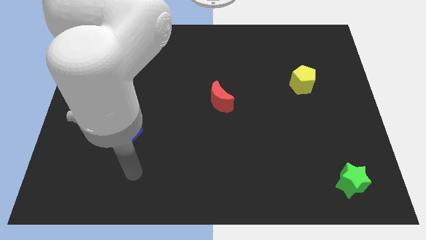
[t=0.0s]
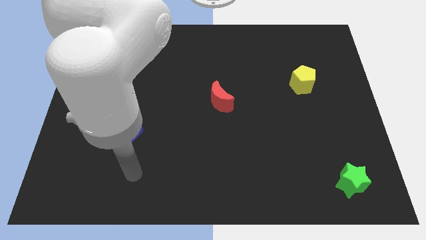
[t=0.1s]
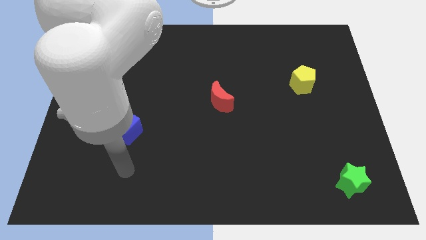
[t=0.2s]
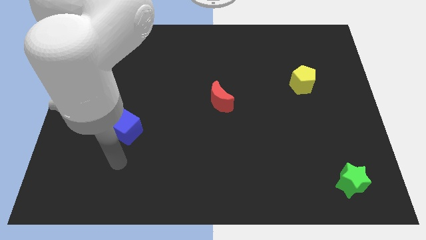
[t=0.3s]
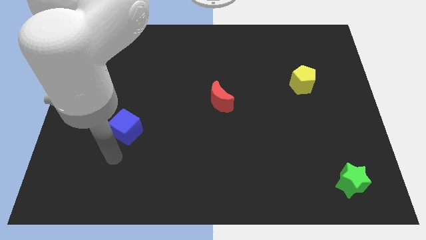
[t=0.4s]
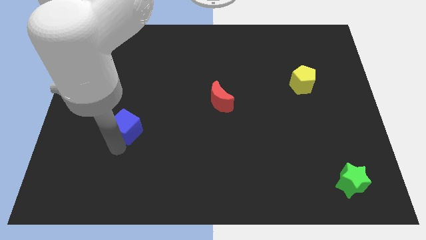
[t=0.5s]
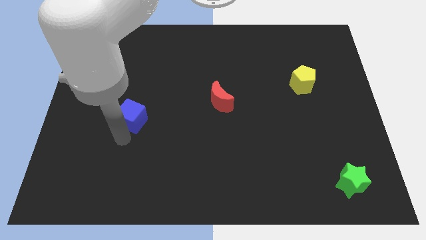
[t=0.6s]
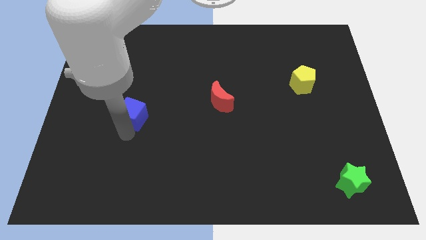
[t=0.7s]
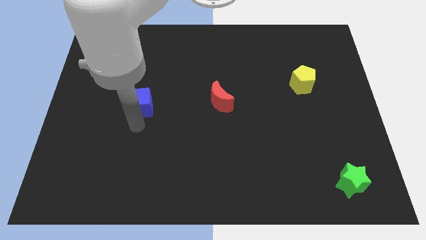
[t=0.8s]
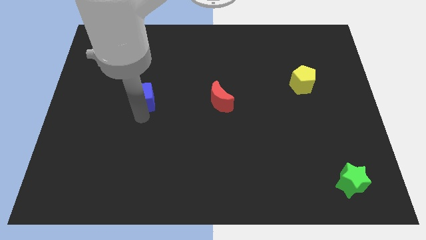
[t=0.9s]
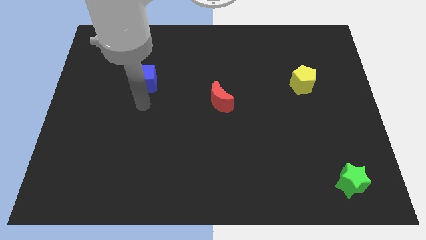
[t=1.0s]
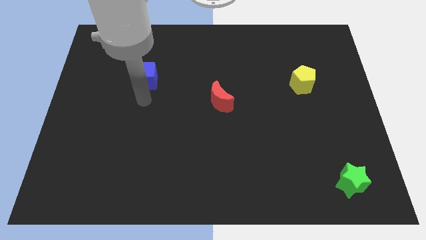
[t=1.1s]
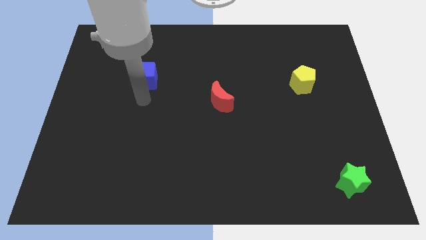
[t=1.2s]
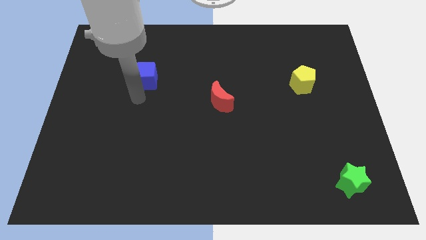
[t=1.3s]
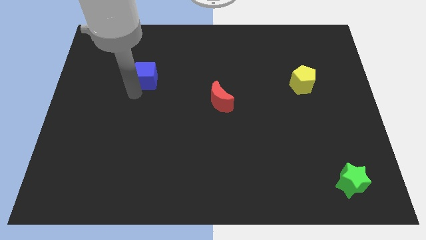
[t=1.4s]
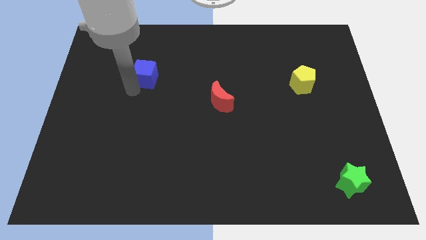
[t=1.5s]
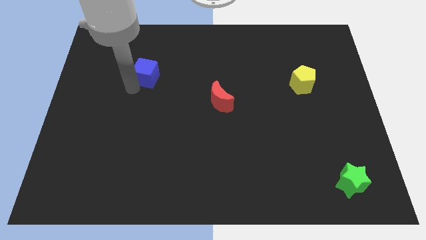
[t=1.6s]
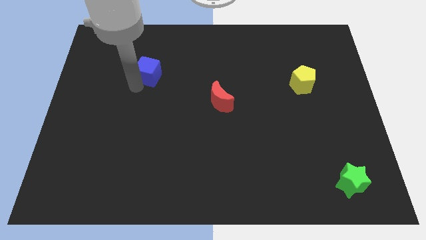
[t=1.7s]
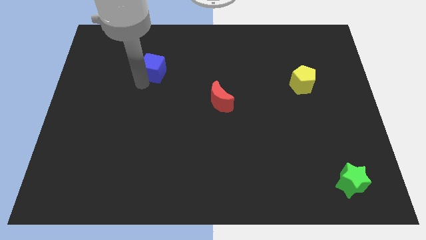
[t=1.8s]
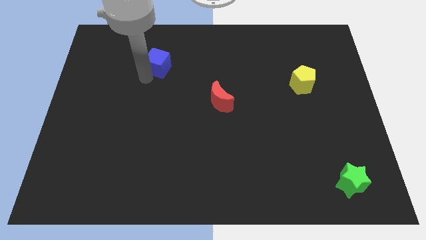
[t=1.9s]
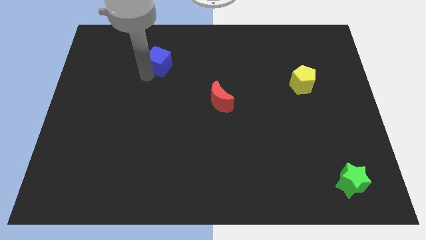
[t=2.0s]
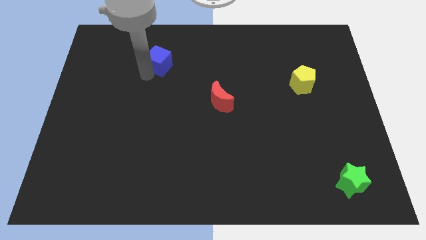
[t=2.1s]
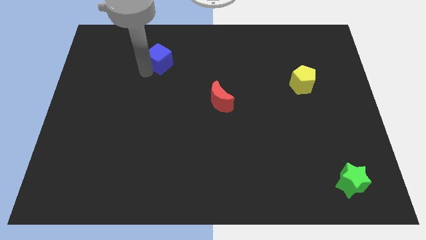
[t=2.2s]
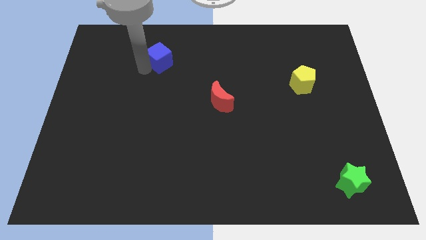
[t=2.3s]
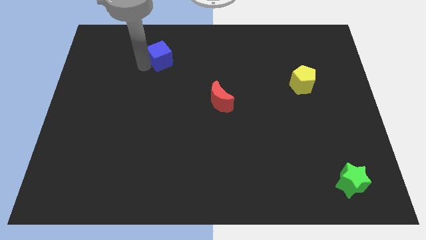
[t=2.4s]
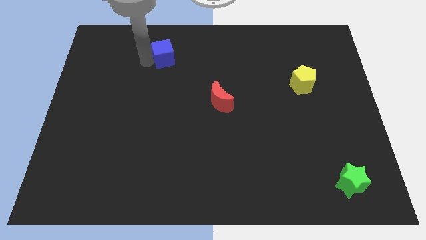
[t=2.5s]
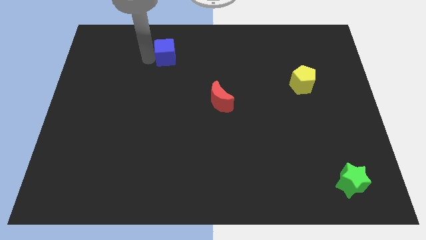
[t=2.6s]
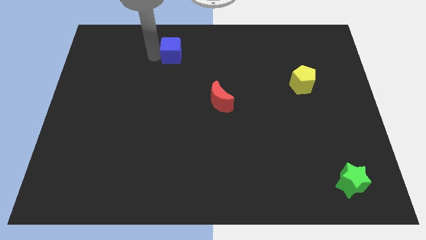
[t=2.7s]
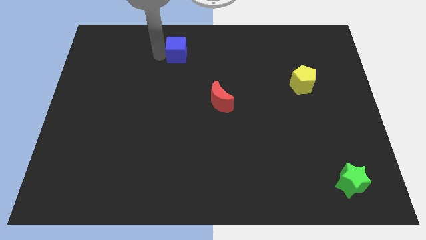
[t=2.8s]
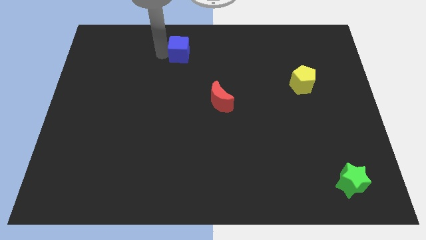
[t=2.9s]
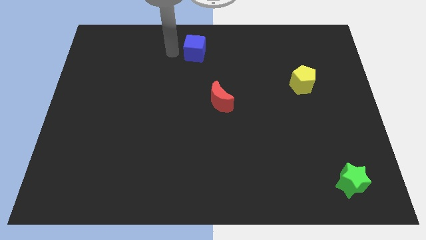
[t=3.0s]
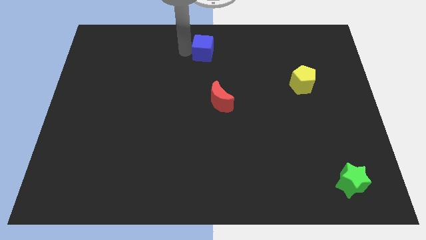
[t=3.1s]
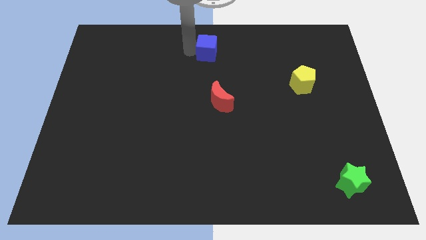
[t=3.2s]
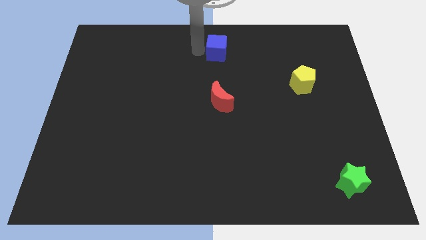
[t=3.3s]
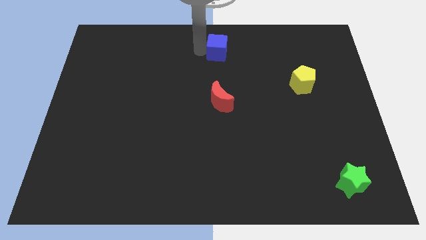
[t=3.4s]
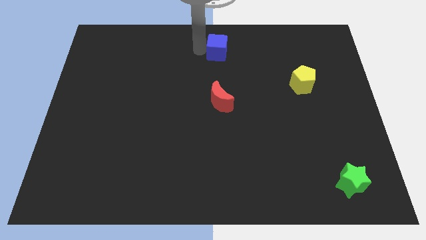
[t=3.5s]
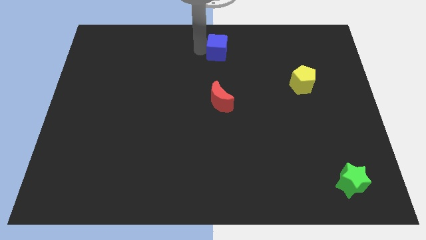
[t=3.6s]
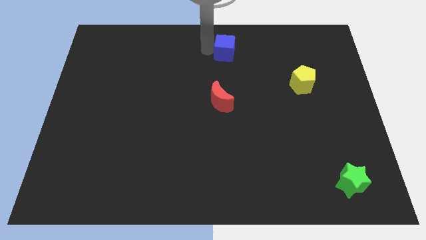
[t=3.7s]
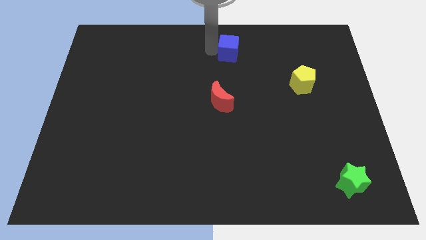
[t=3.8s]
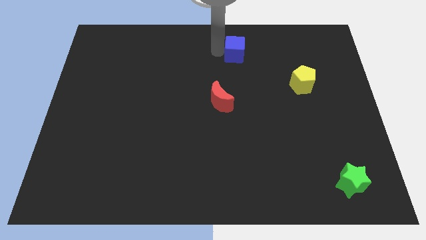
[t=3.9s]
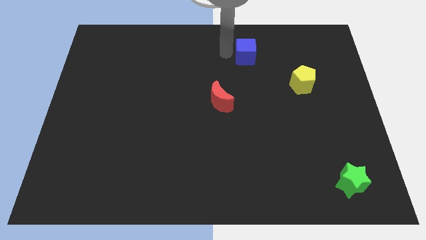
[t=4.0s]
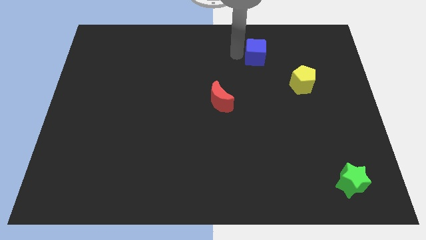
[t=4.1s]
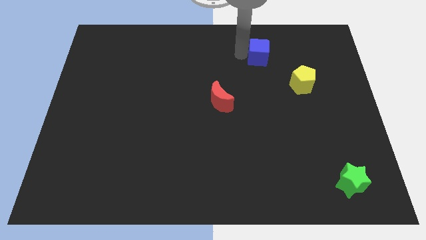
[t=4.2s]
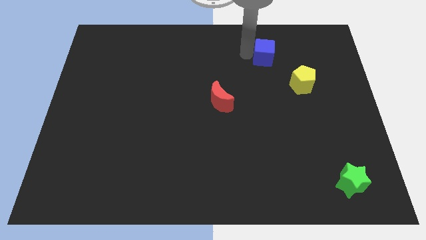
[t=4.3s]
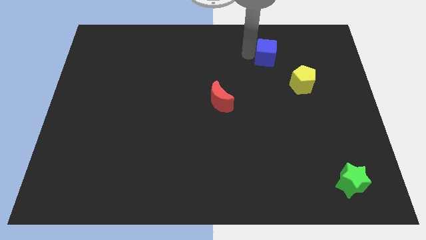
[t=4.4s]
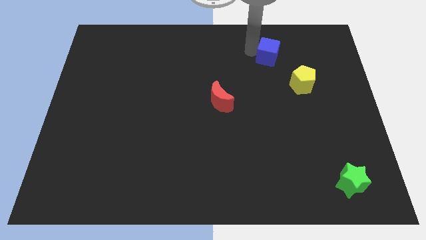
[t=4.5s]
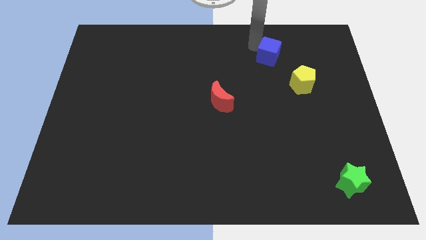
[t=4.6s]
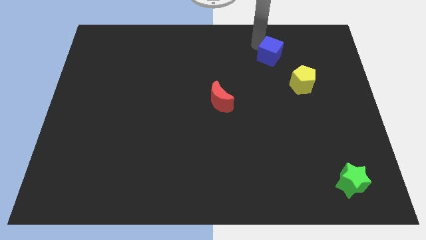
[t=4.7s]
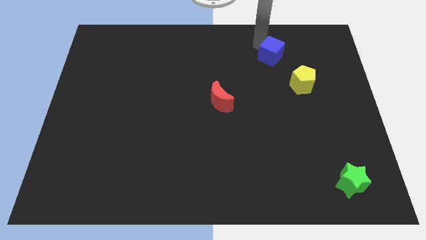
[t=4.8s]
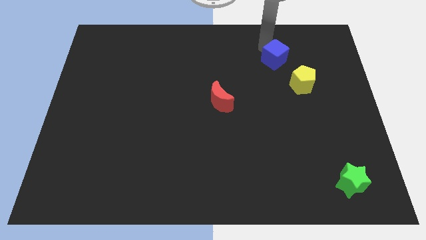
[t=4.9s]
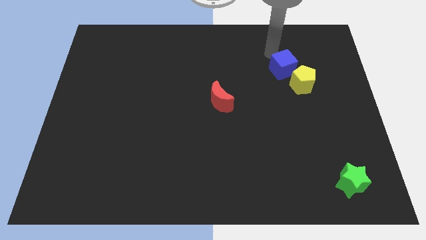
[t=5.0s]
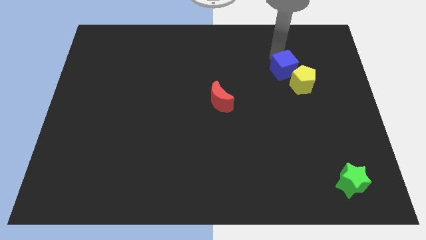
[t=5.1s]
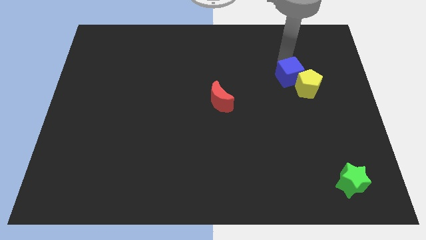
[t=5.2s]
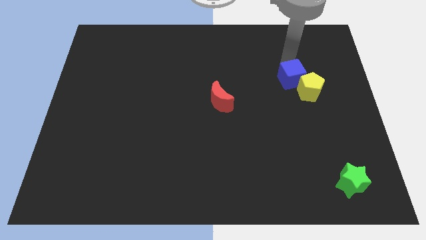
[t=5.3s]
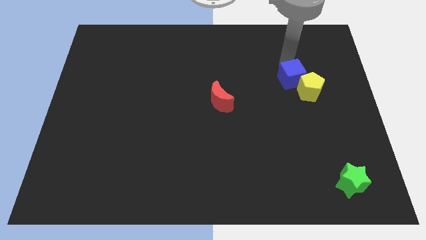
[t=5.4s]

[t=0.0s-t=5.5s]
put the cube next to the yellow block

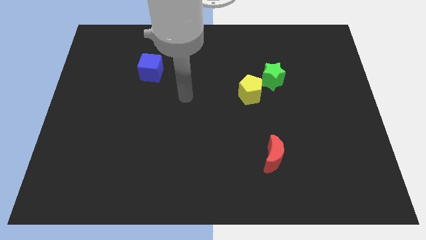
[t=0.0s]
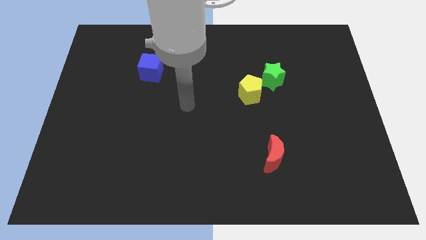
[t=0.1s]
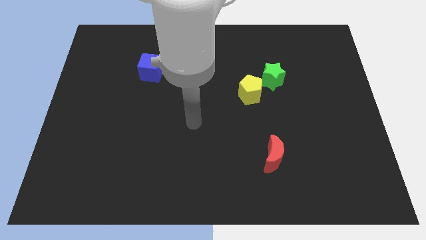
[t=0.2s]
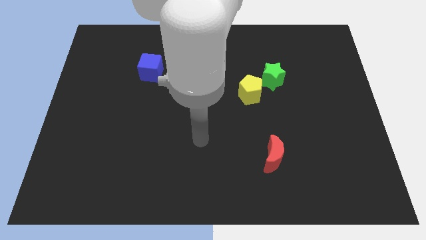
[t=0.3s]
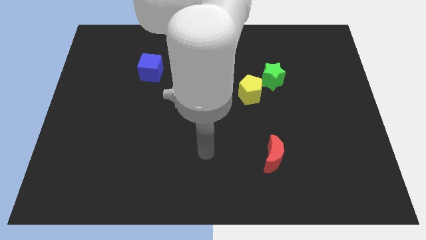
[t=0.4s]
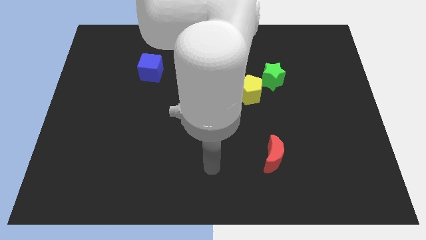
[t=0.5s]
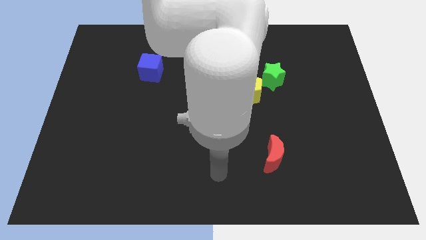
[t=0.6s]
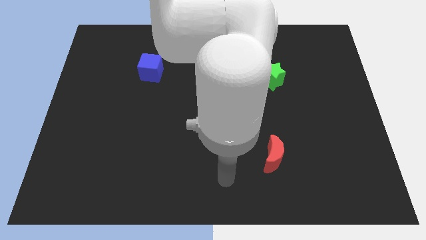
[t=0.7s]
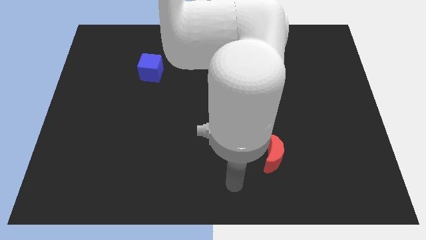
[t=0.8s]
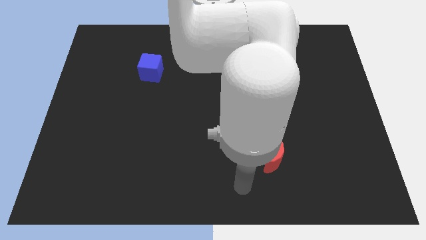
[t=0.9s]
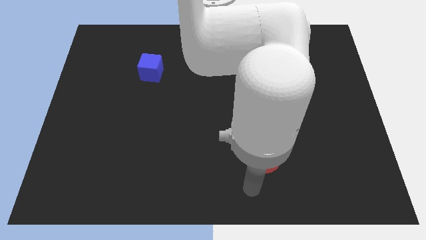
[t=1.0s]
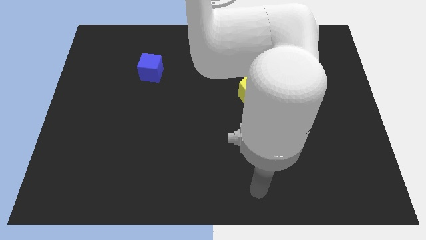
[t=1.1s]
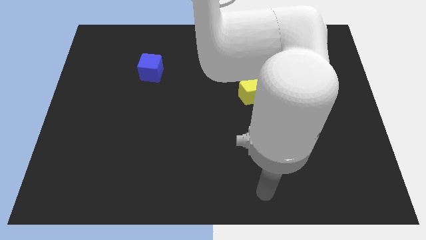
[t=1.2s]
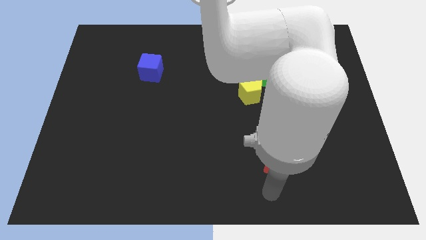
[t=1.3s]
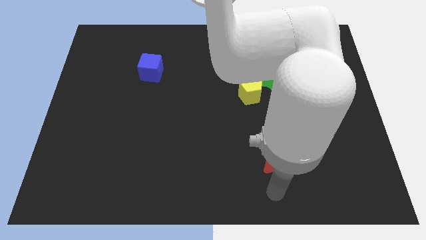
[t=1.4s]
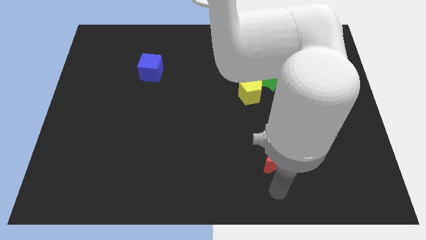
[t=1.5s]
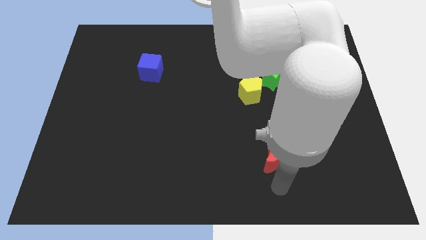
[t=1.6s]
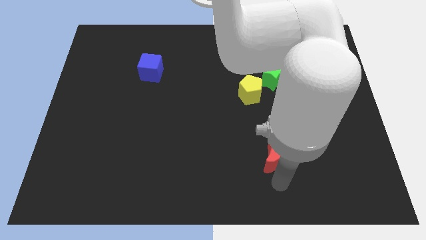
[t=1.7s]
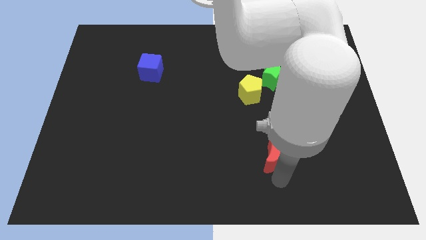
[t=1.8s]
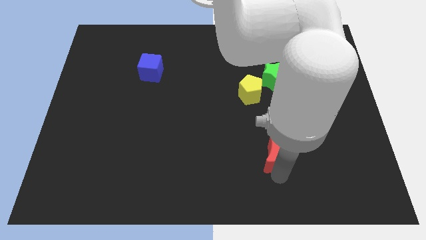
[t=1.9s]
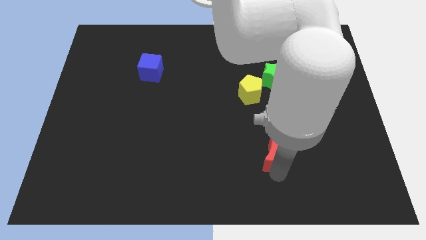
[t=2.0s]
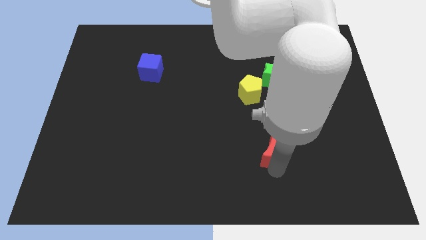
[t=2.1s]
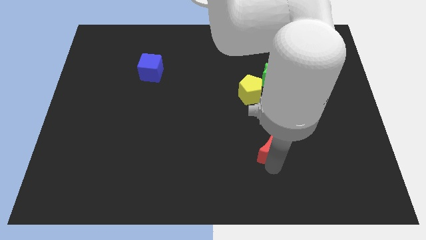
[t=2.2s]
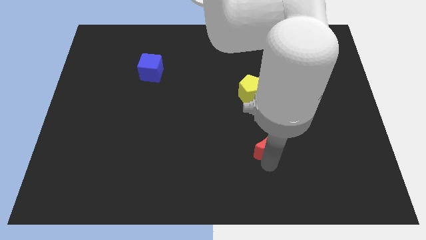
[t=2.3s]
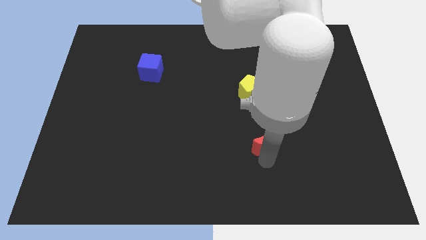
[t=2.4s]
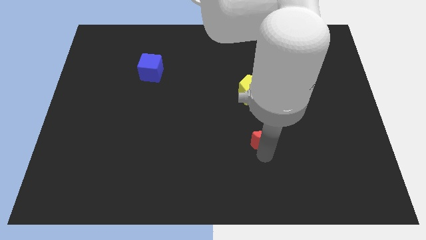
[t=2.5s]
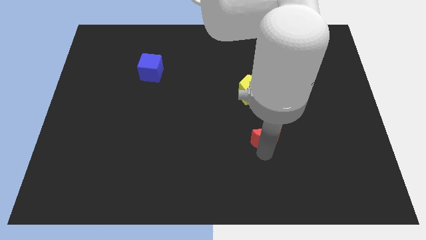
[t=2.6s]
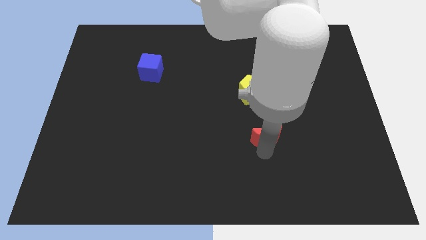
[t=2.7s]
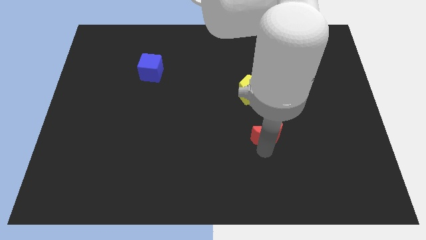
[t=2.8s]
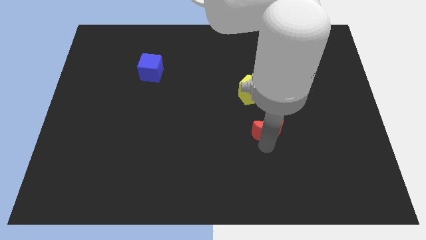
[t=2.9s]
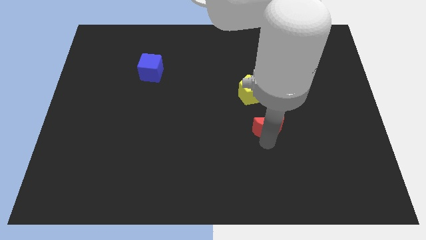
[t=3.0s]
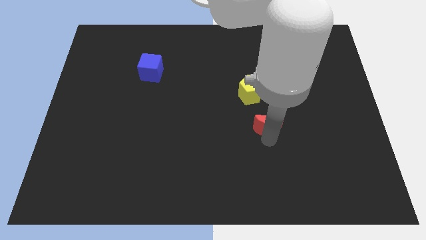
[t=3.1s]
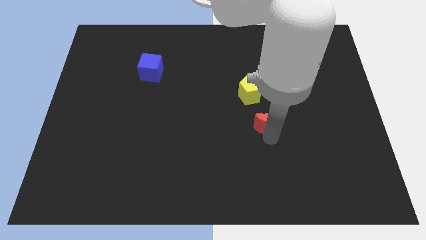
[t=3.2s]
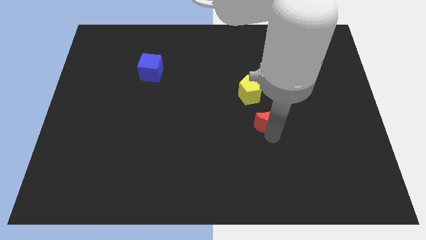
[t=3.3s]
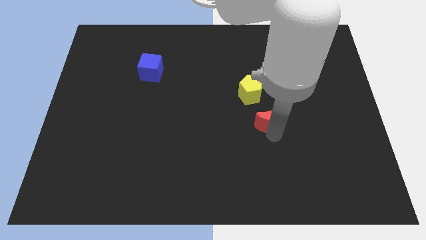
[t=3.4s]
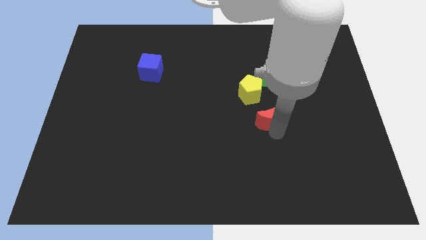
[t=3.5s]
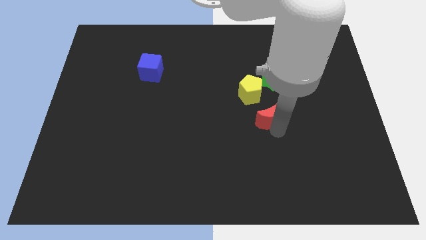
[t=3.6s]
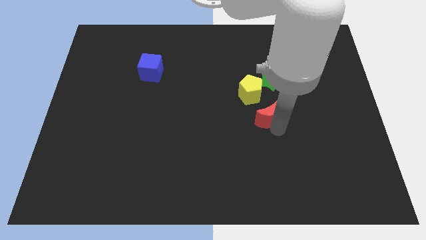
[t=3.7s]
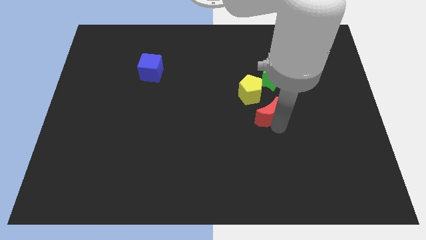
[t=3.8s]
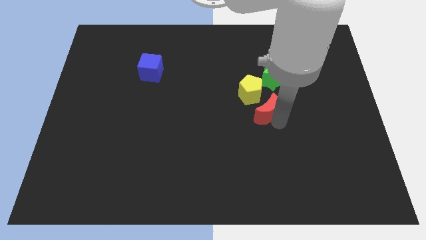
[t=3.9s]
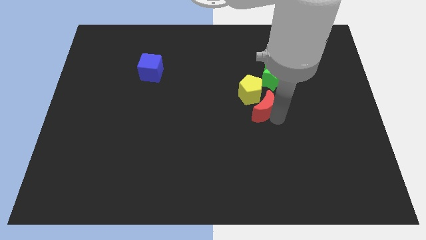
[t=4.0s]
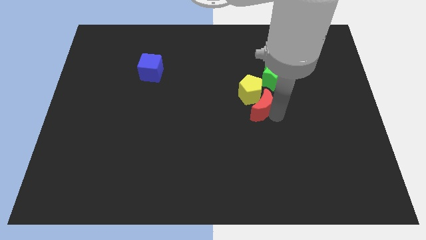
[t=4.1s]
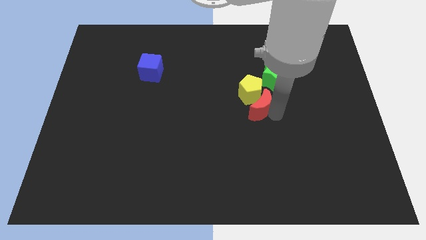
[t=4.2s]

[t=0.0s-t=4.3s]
slide the moon next to the yellow pentagon
